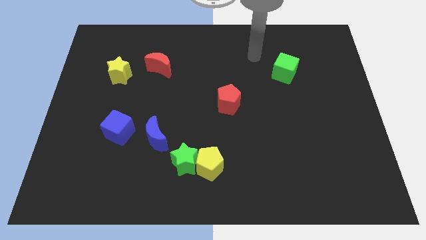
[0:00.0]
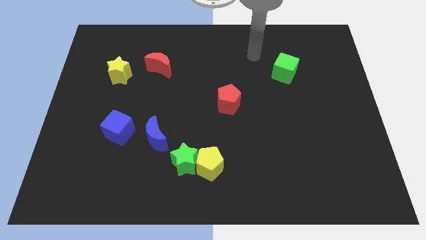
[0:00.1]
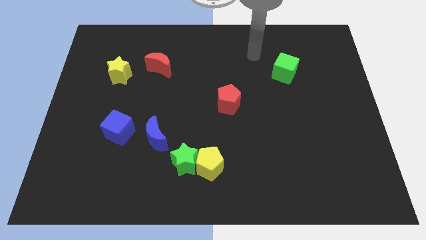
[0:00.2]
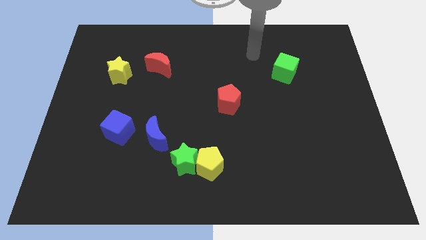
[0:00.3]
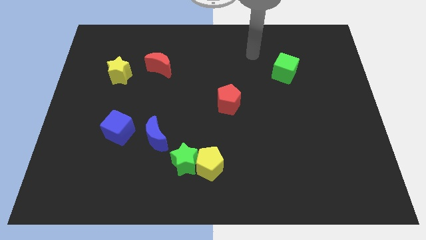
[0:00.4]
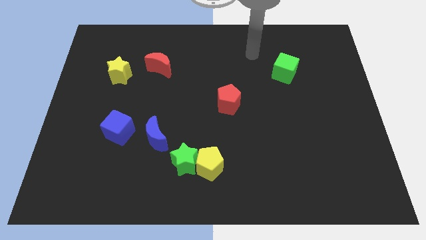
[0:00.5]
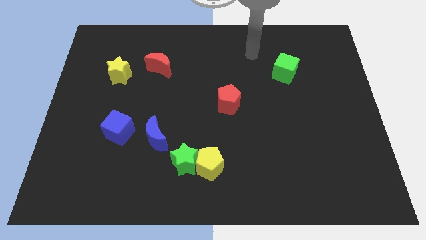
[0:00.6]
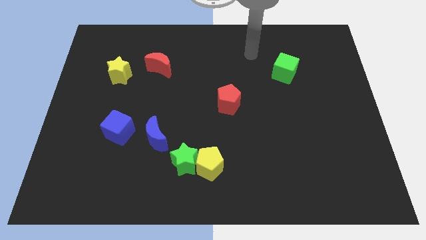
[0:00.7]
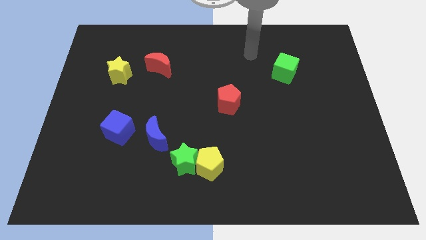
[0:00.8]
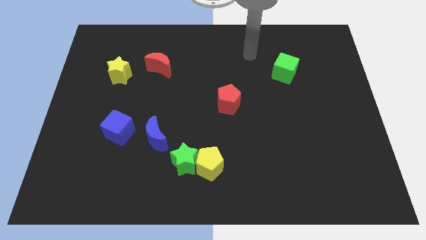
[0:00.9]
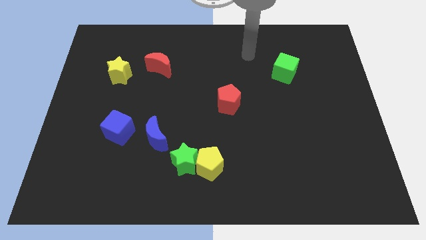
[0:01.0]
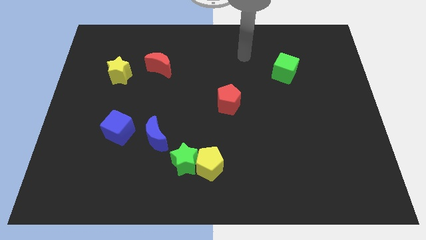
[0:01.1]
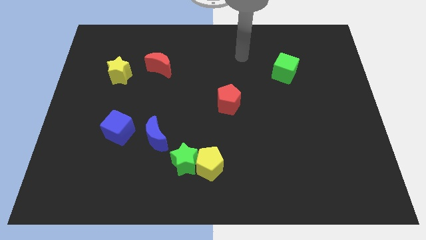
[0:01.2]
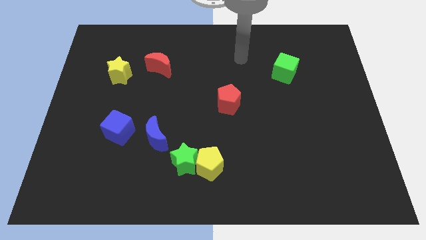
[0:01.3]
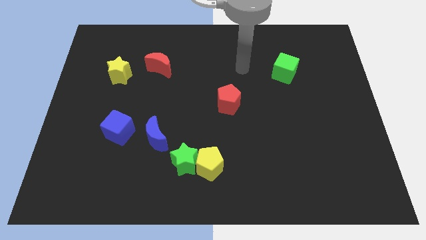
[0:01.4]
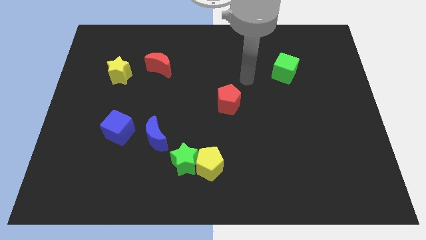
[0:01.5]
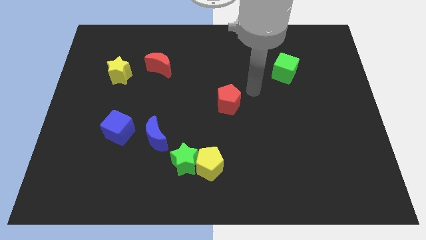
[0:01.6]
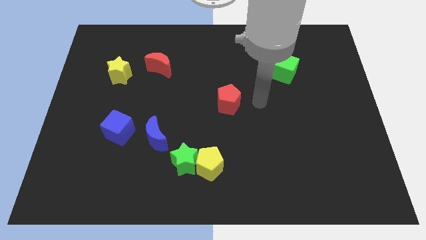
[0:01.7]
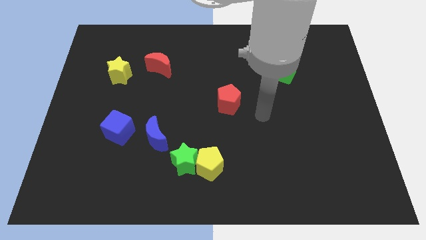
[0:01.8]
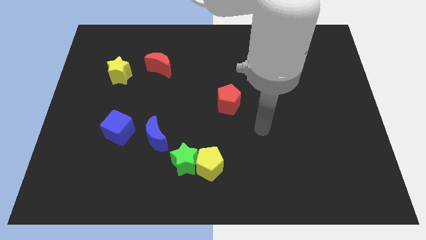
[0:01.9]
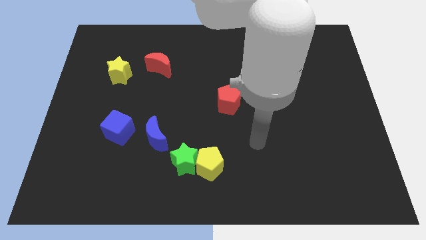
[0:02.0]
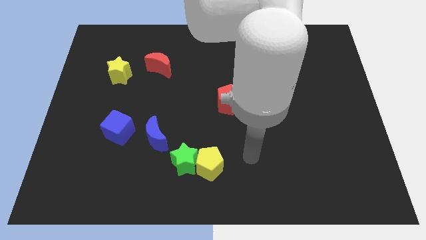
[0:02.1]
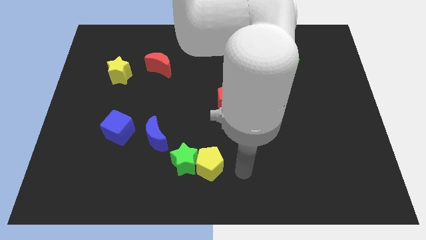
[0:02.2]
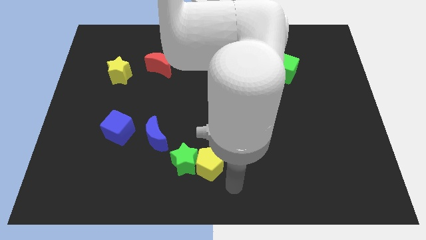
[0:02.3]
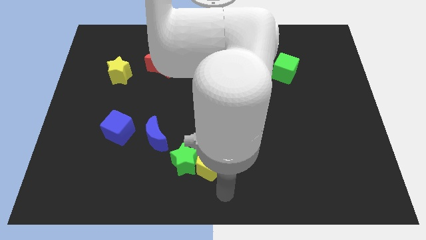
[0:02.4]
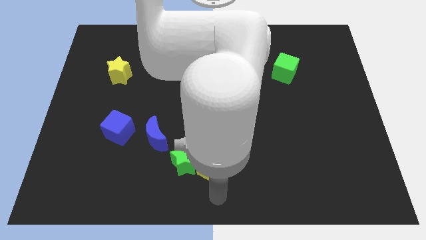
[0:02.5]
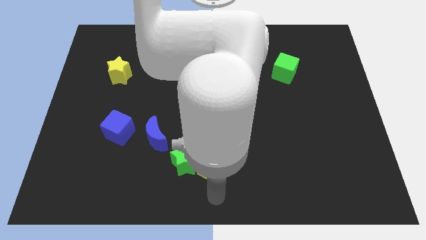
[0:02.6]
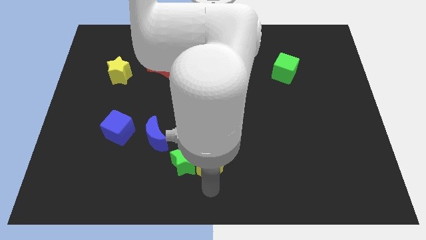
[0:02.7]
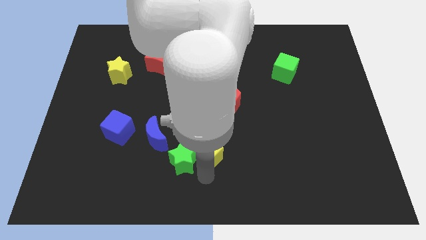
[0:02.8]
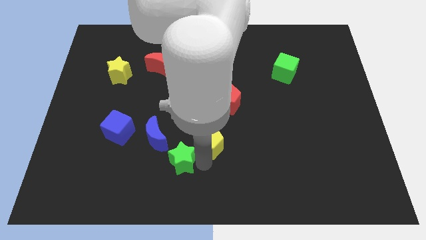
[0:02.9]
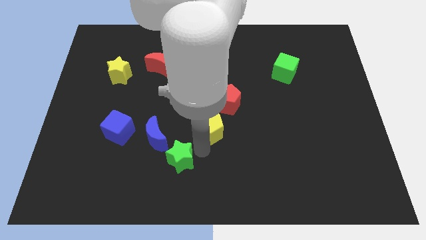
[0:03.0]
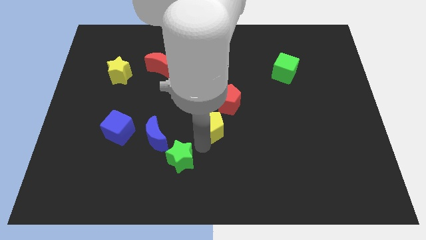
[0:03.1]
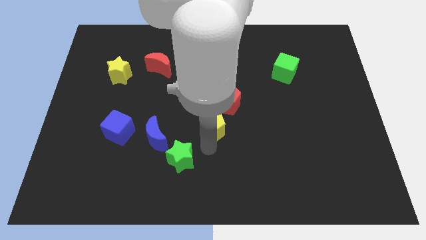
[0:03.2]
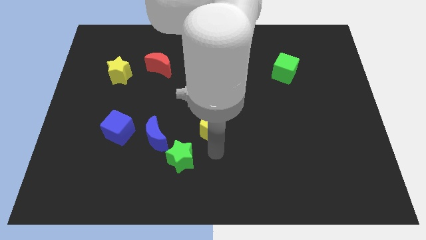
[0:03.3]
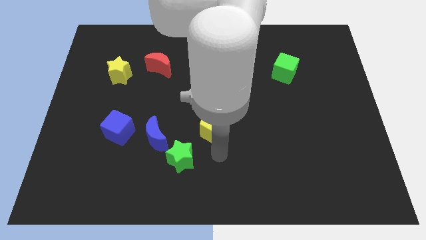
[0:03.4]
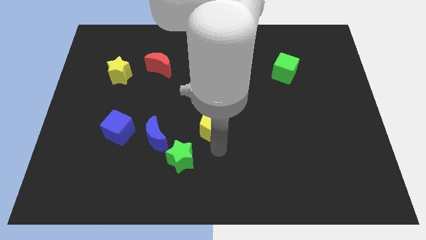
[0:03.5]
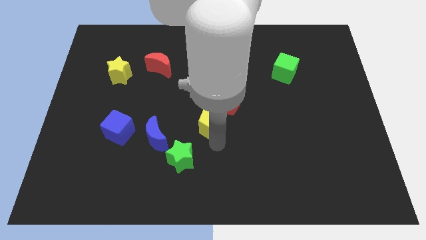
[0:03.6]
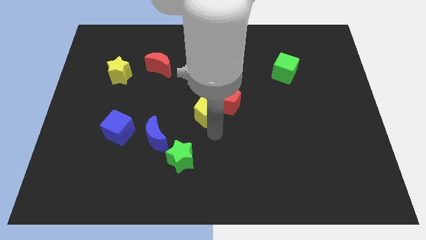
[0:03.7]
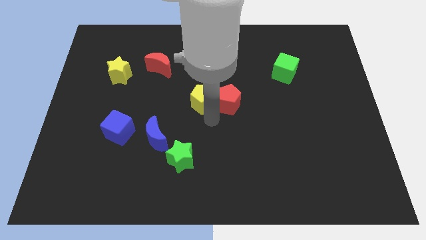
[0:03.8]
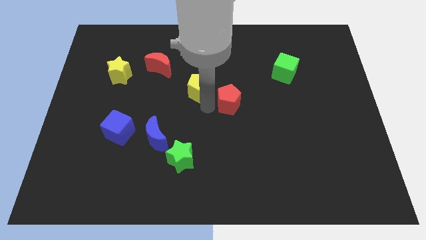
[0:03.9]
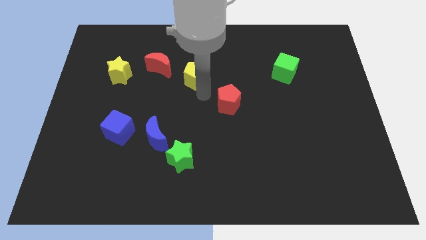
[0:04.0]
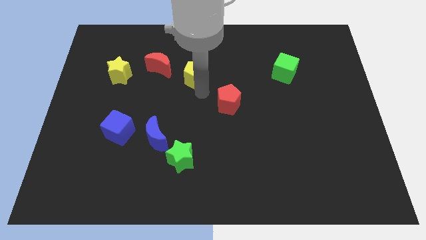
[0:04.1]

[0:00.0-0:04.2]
place yellow pentagon in between red blocks

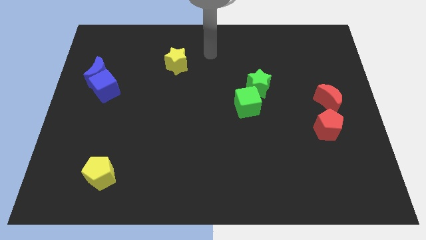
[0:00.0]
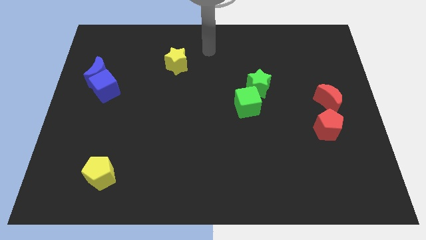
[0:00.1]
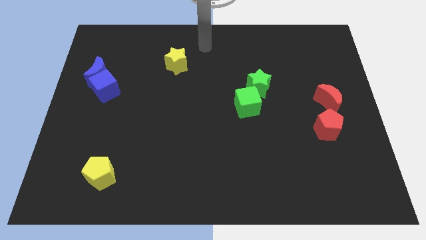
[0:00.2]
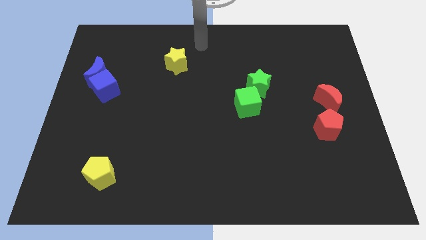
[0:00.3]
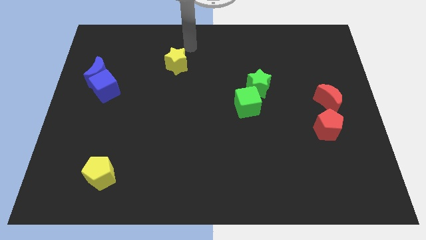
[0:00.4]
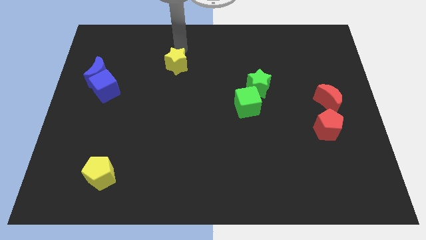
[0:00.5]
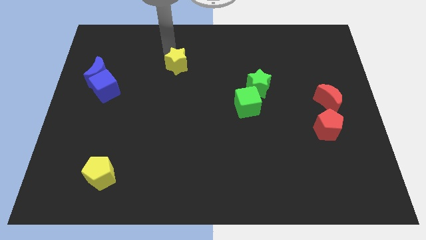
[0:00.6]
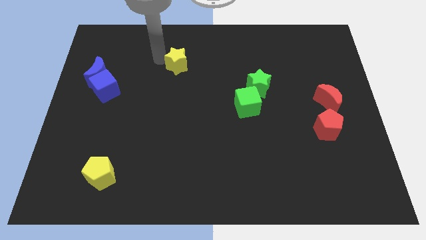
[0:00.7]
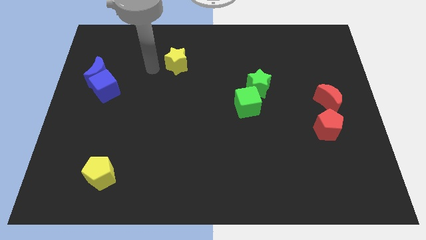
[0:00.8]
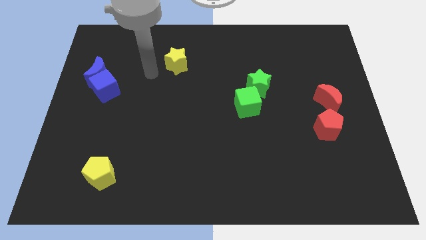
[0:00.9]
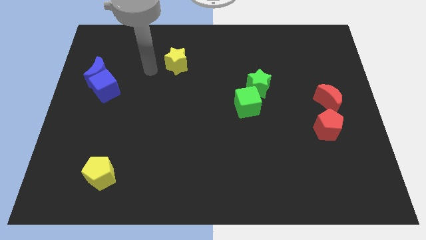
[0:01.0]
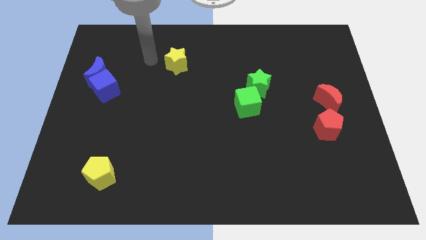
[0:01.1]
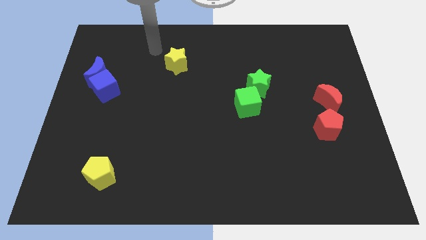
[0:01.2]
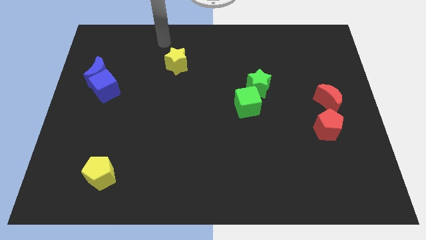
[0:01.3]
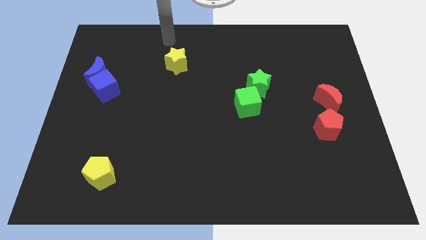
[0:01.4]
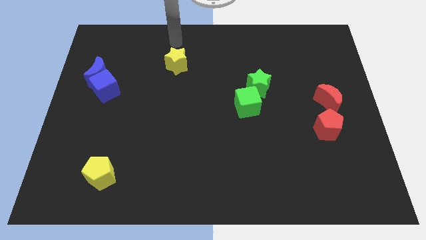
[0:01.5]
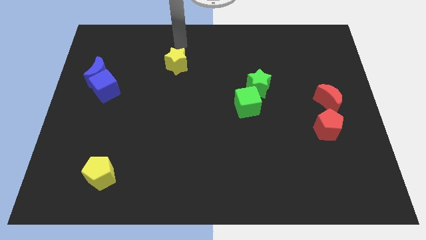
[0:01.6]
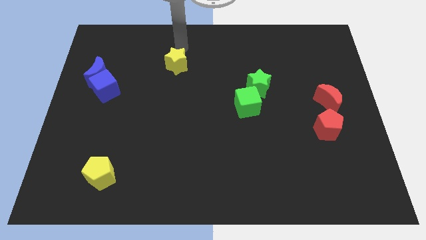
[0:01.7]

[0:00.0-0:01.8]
point your hand at the top side of the yellow star

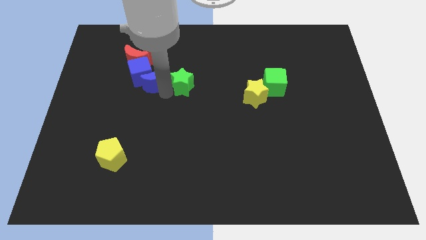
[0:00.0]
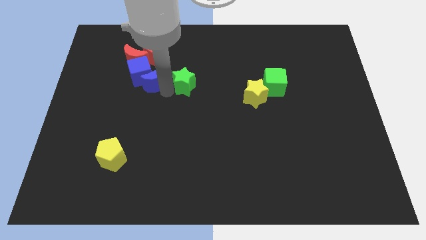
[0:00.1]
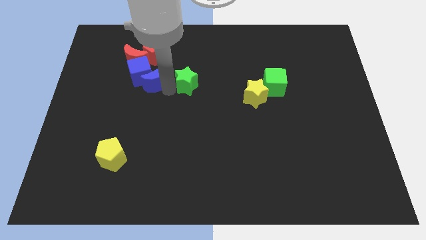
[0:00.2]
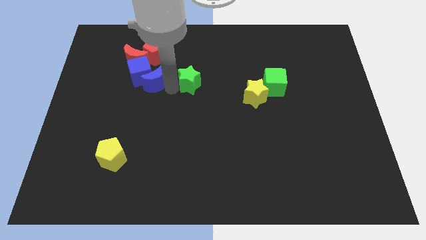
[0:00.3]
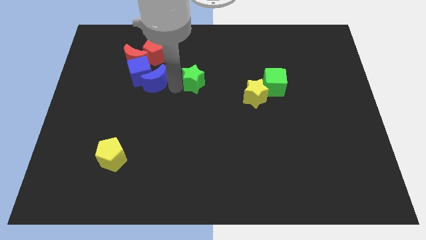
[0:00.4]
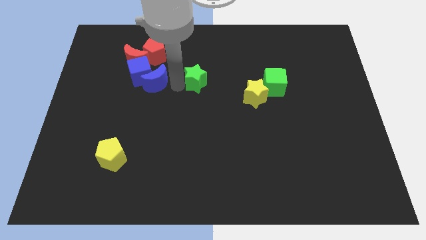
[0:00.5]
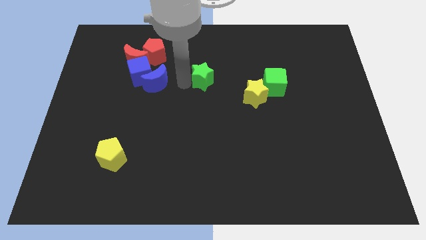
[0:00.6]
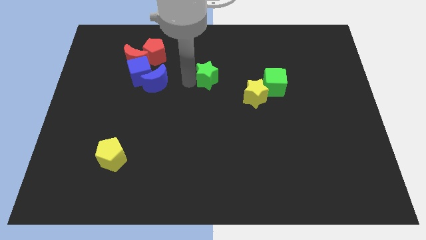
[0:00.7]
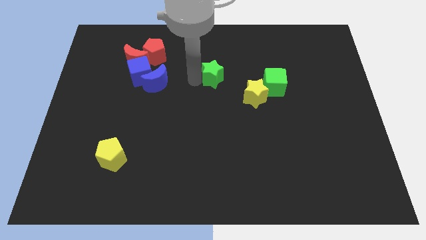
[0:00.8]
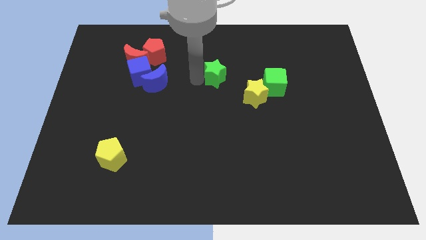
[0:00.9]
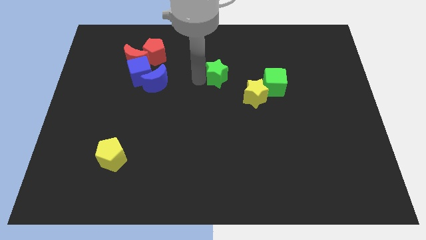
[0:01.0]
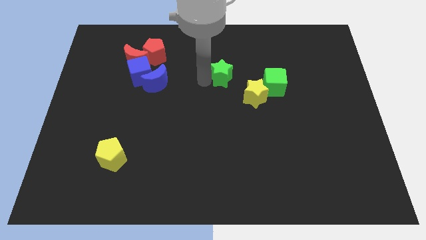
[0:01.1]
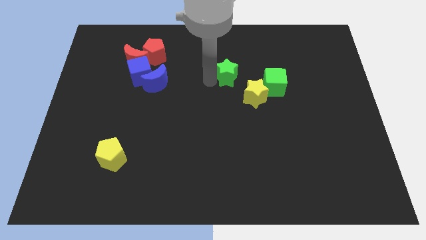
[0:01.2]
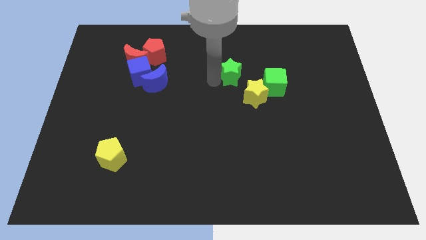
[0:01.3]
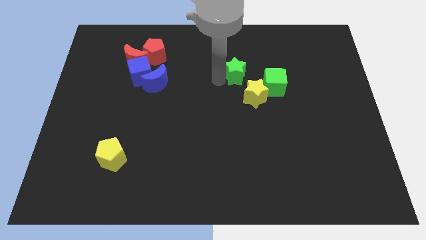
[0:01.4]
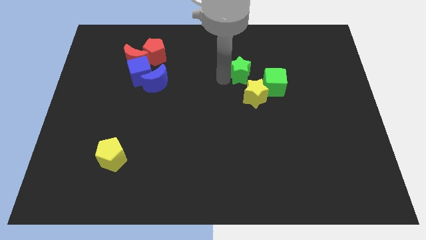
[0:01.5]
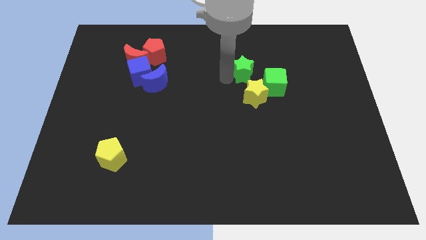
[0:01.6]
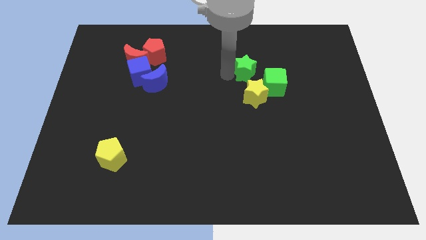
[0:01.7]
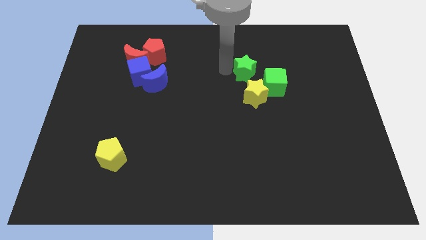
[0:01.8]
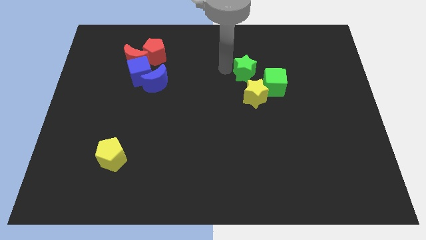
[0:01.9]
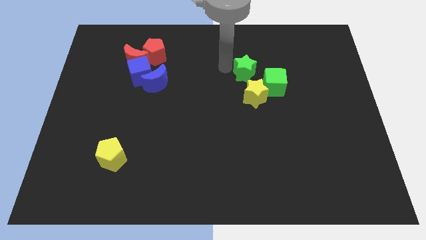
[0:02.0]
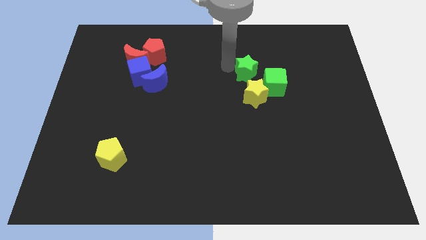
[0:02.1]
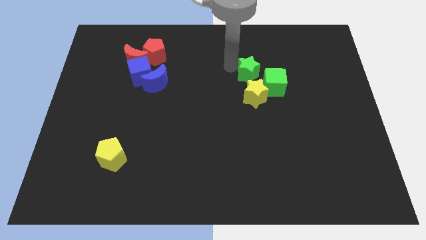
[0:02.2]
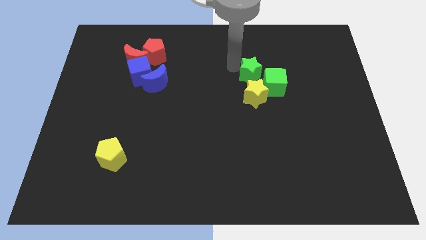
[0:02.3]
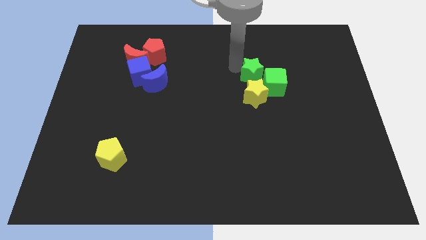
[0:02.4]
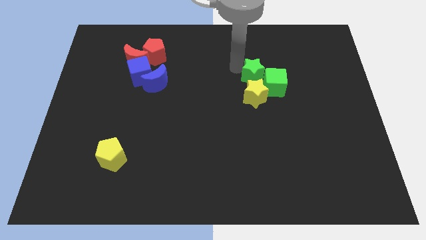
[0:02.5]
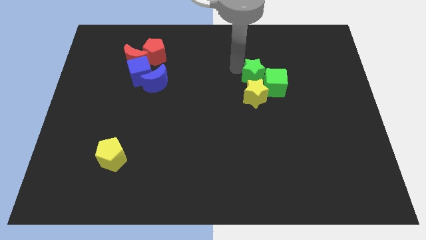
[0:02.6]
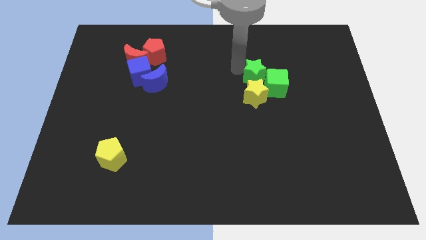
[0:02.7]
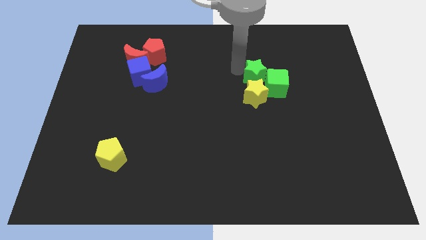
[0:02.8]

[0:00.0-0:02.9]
move the green star above to the yellow star
